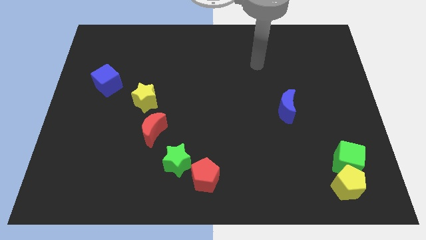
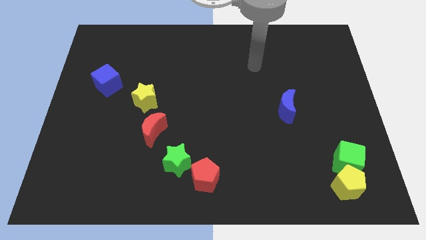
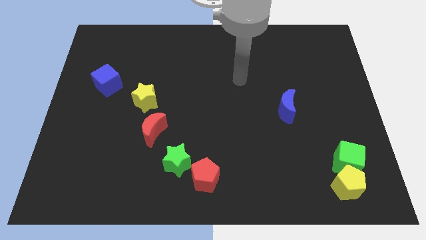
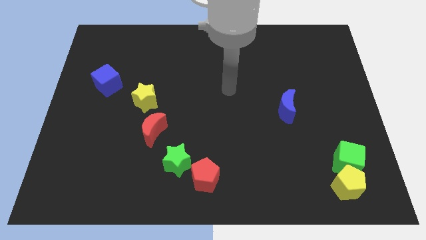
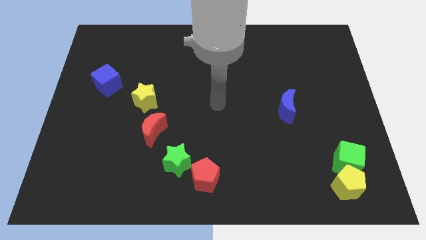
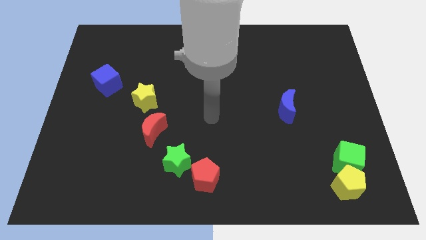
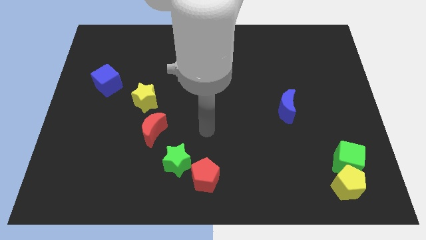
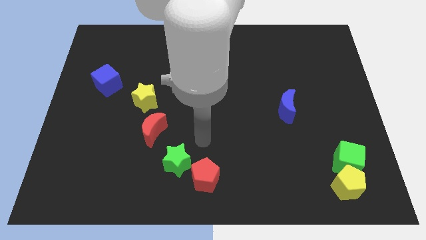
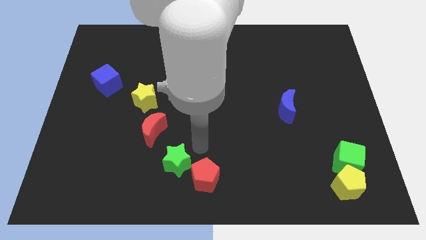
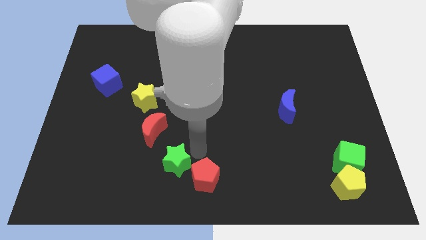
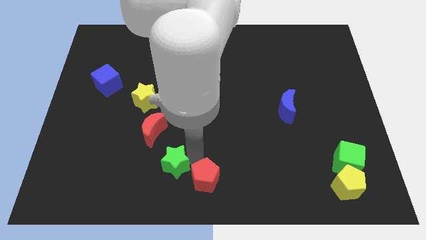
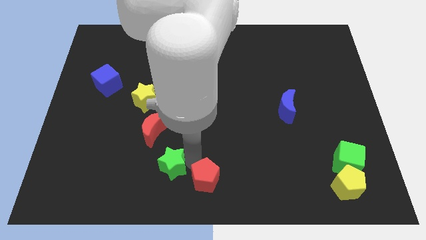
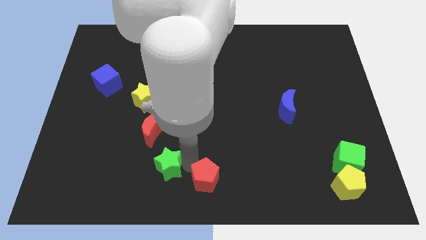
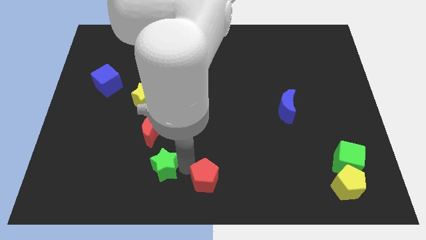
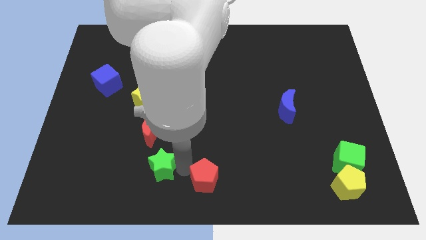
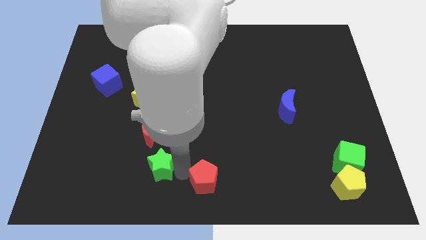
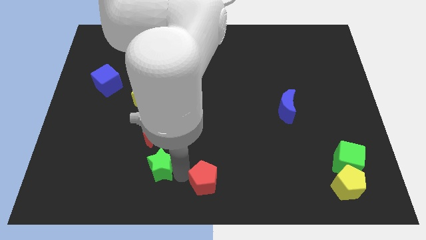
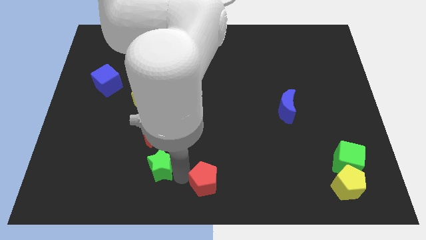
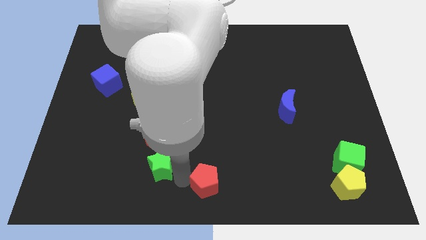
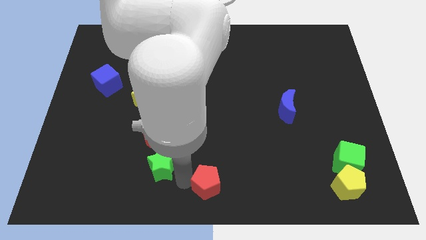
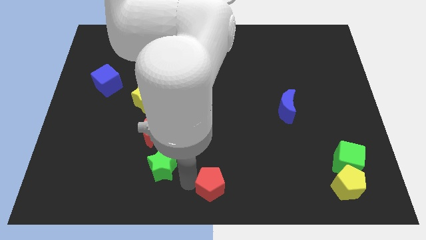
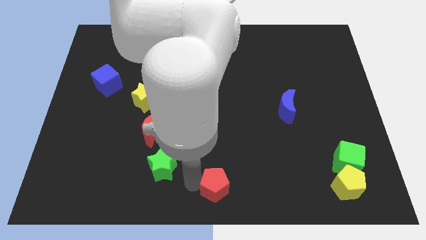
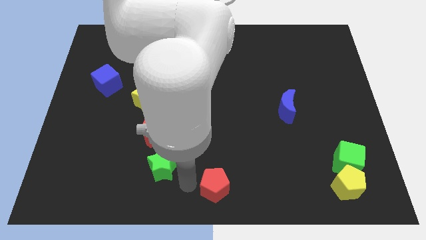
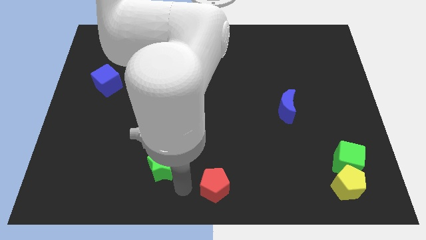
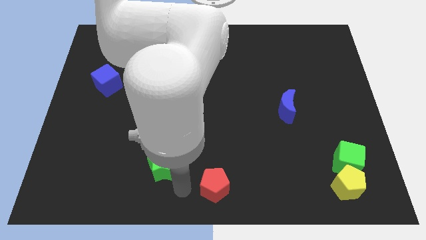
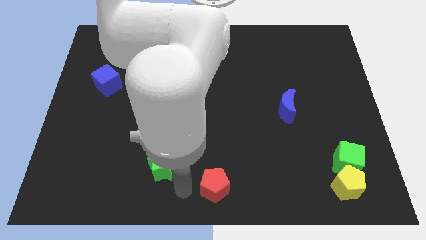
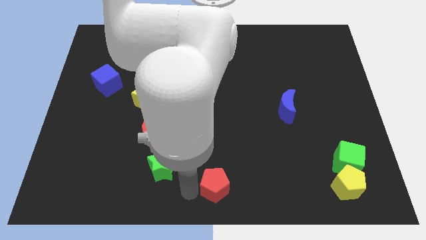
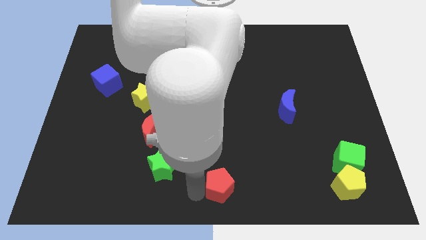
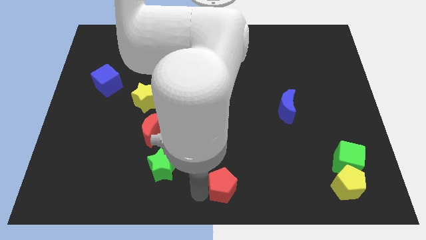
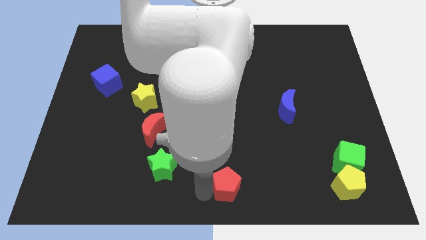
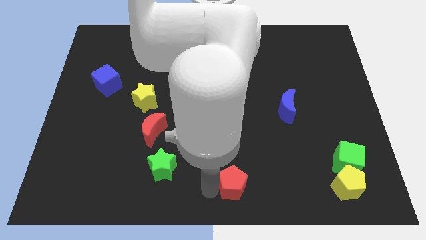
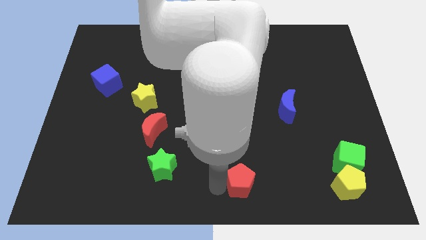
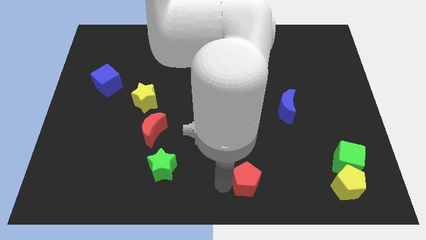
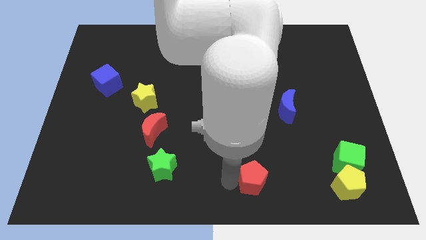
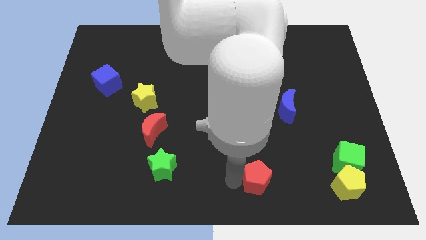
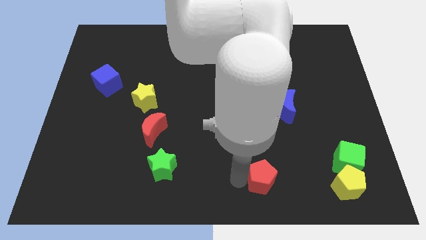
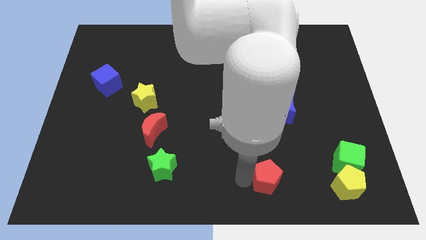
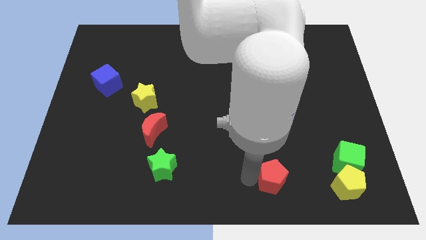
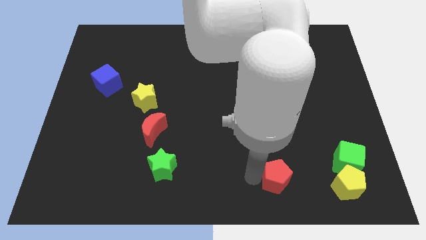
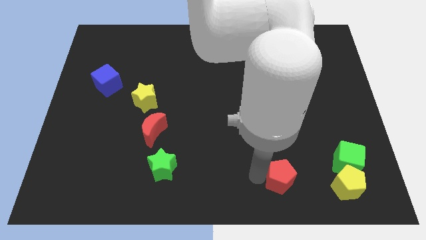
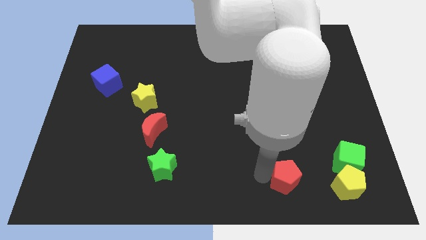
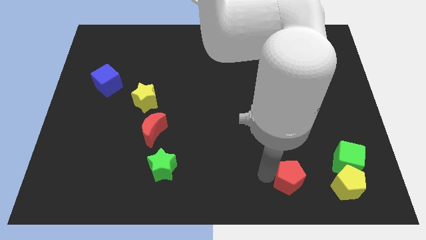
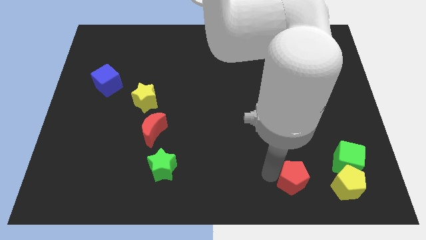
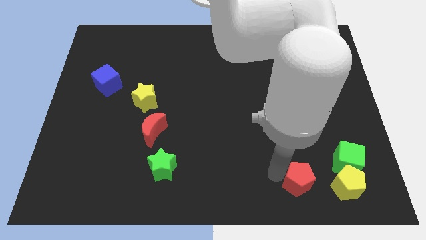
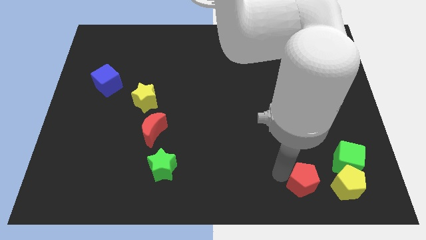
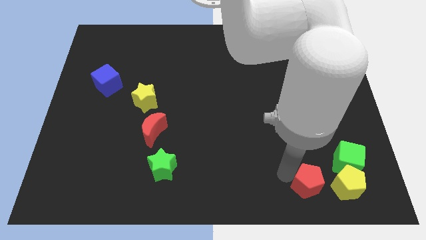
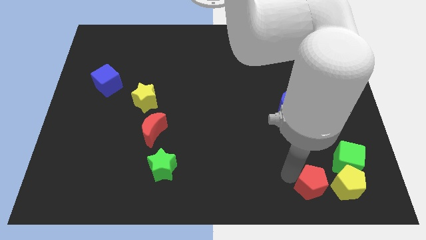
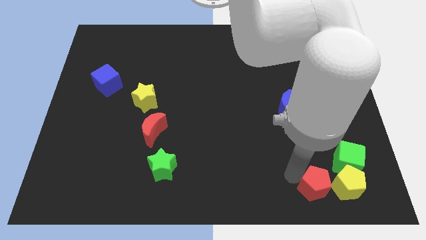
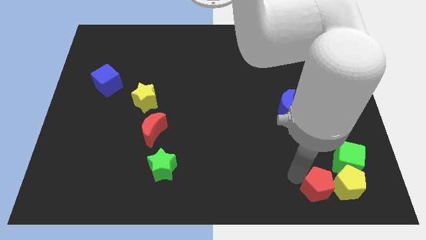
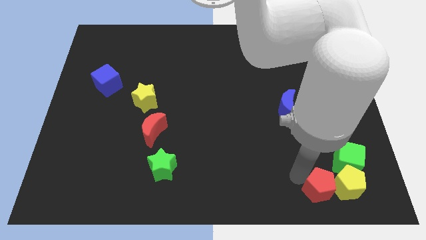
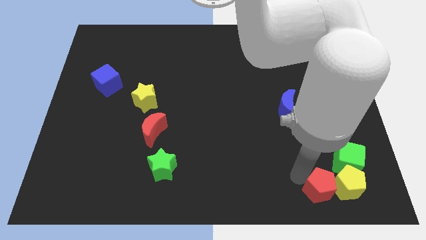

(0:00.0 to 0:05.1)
push the red pentagon to the yellow pentagon

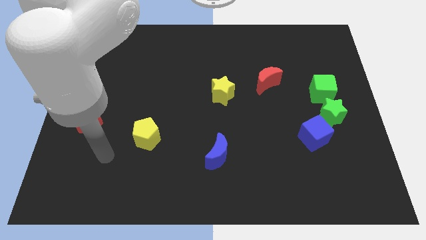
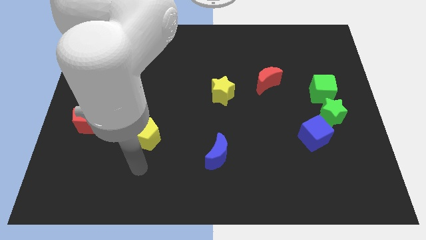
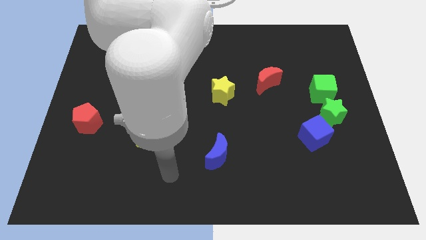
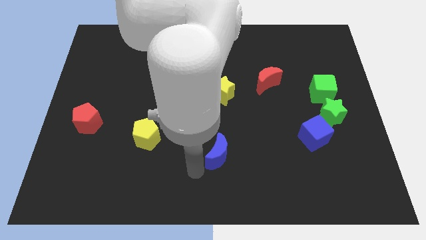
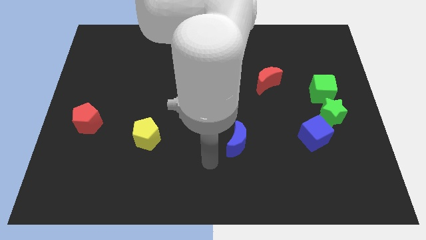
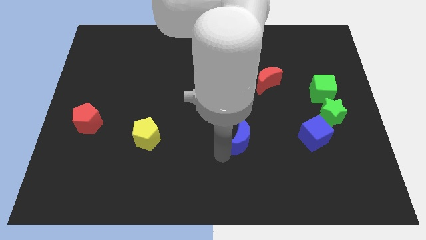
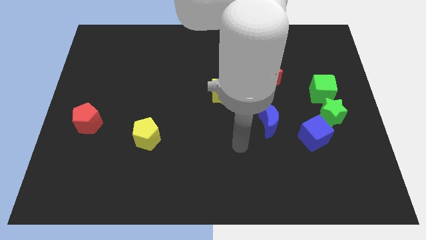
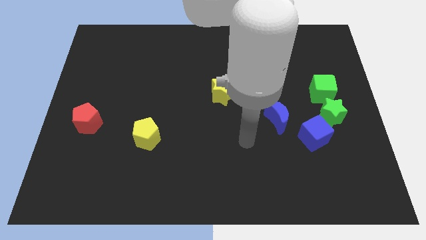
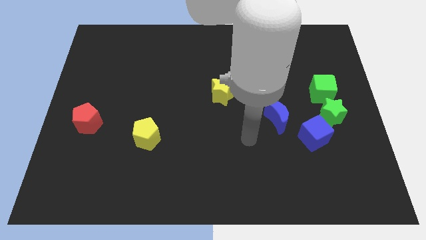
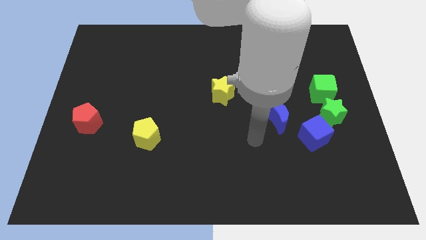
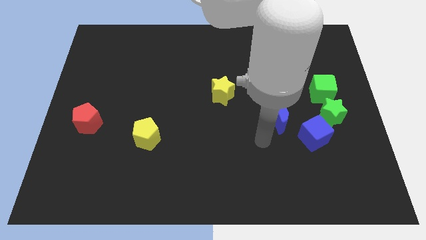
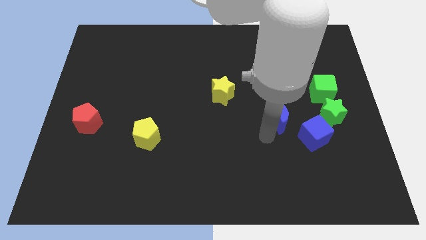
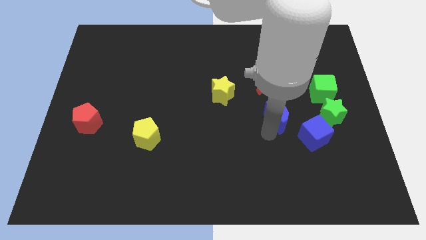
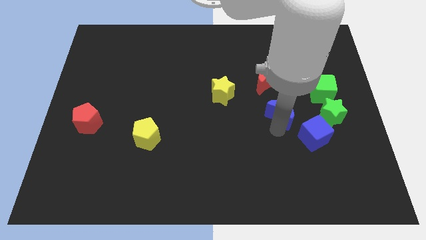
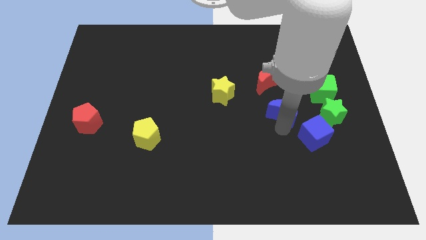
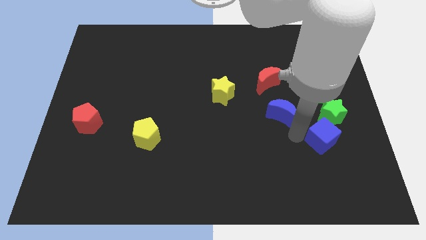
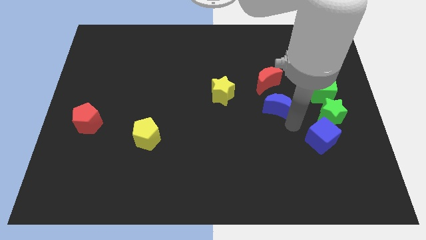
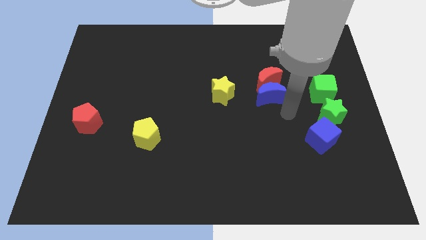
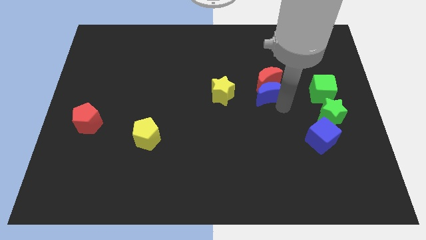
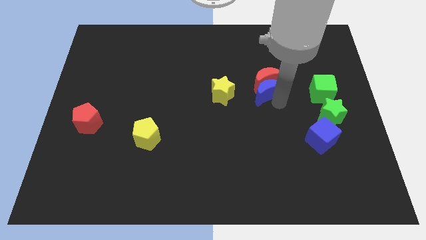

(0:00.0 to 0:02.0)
put the blue moon next to the red moon

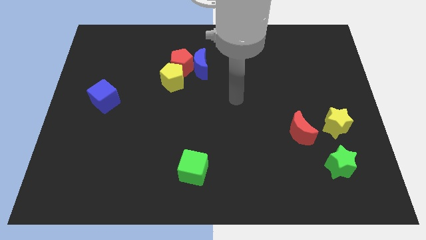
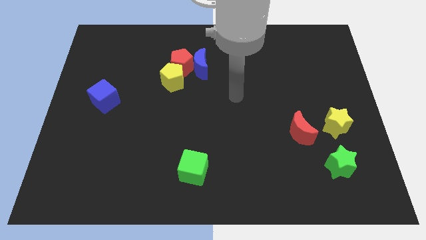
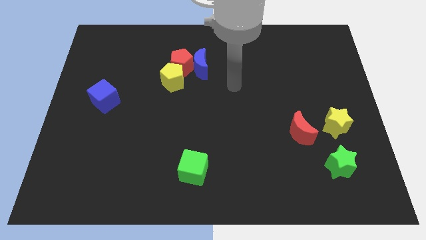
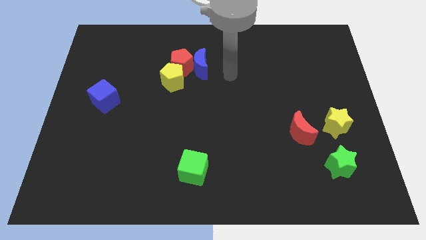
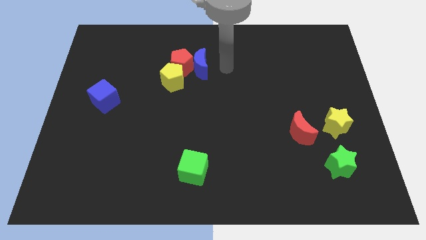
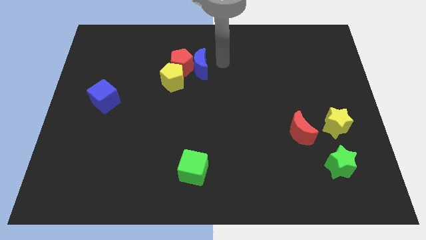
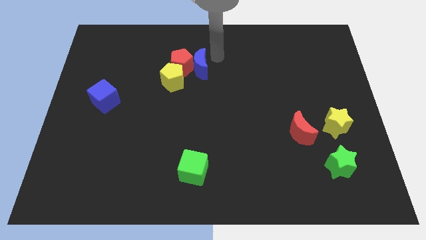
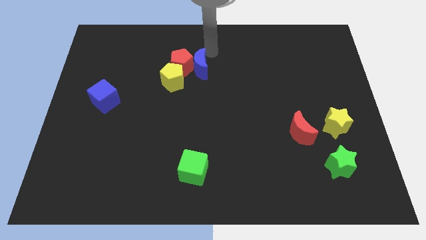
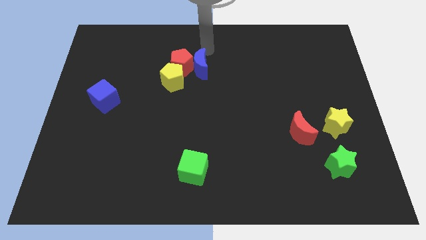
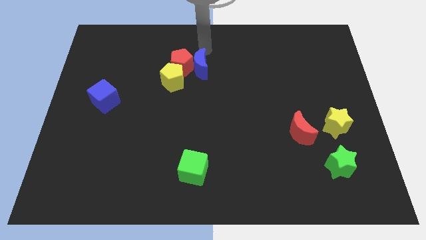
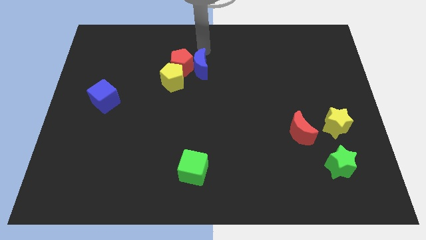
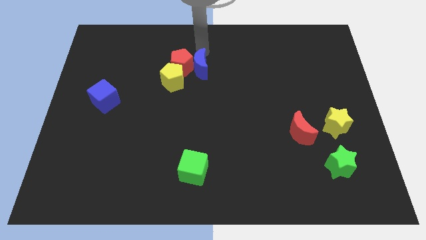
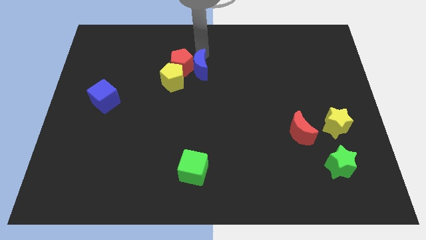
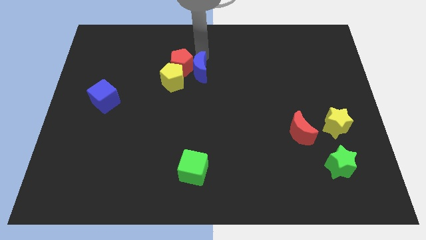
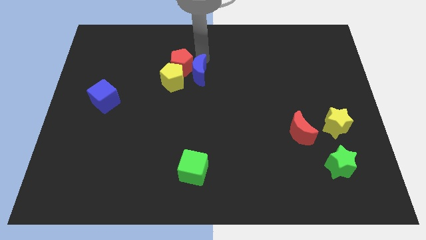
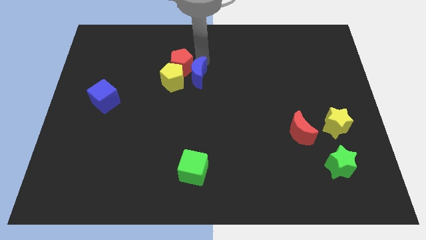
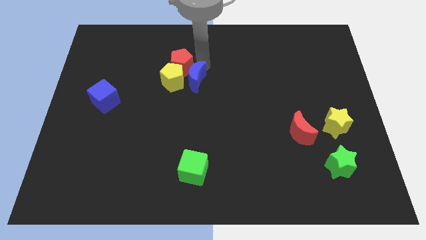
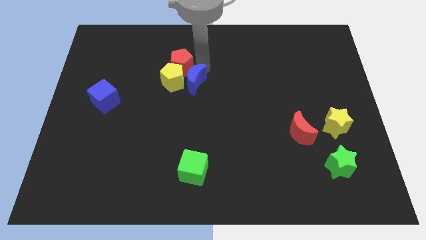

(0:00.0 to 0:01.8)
put the blue moon close to the yellow pentagon
